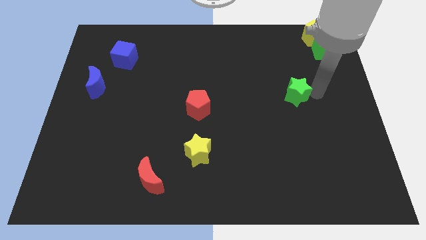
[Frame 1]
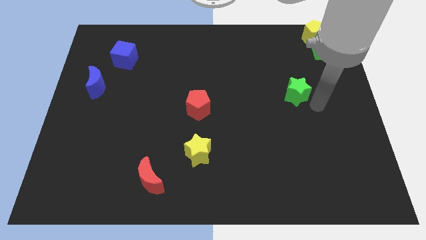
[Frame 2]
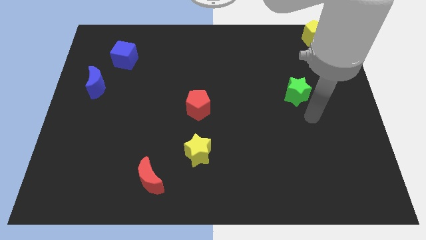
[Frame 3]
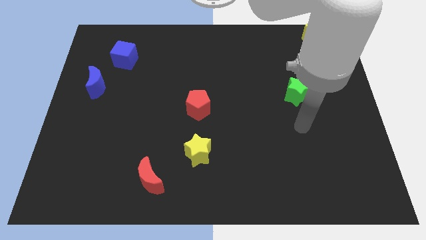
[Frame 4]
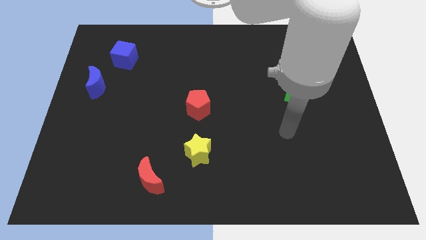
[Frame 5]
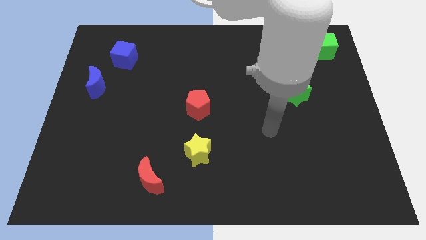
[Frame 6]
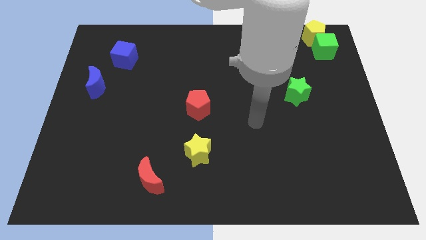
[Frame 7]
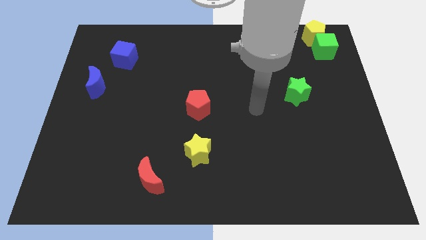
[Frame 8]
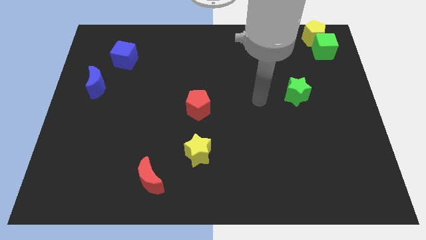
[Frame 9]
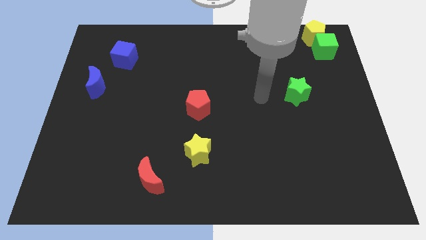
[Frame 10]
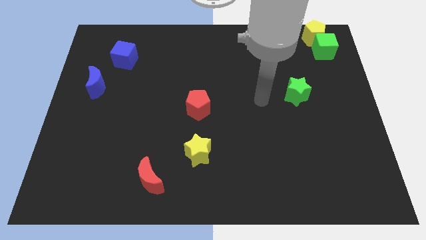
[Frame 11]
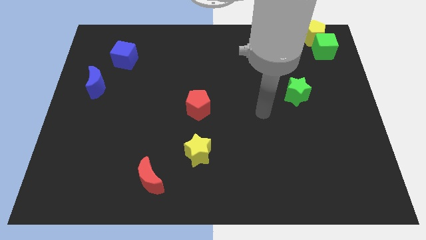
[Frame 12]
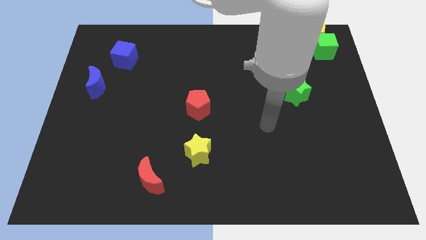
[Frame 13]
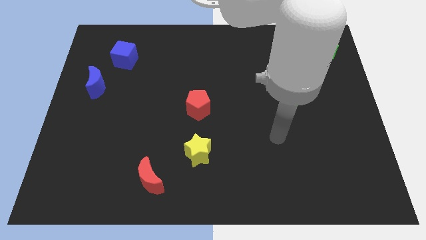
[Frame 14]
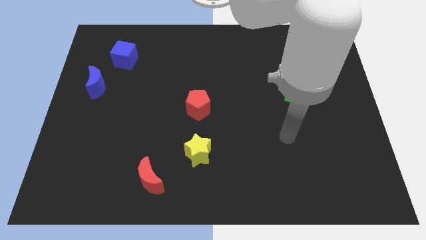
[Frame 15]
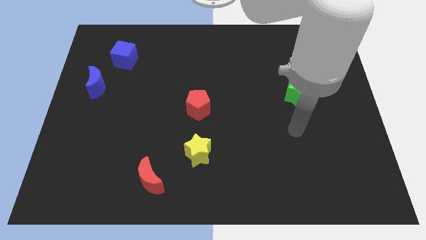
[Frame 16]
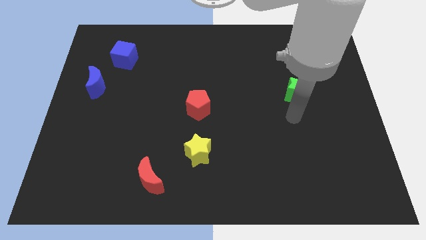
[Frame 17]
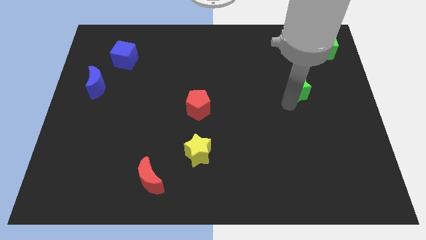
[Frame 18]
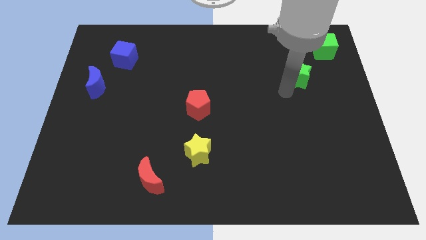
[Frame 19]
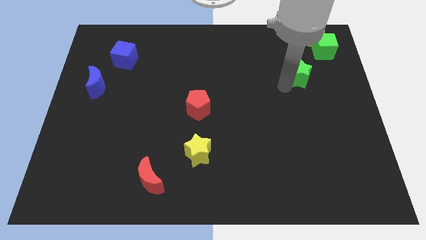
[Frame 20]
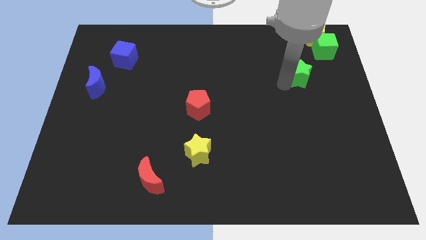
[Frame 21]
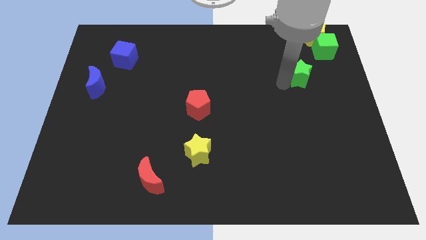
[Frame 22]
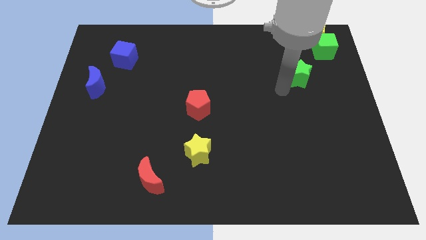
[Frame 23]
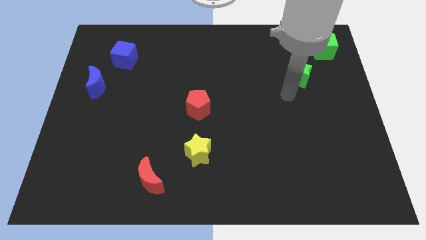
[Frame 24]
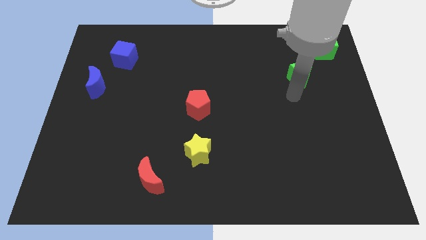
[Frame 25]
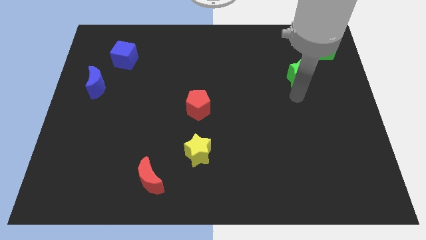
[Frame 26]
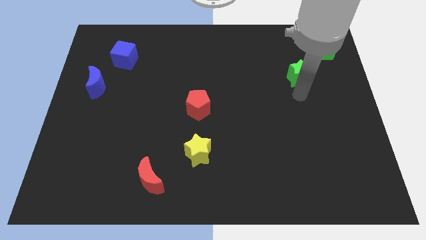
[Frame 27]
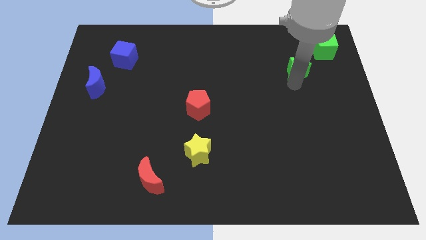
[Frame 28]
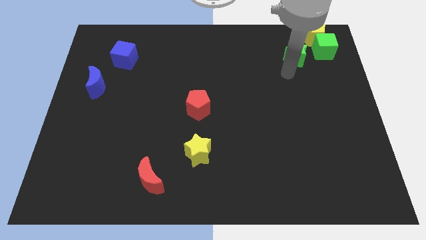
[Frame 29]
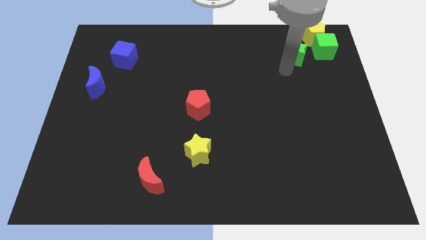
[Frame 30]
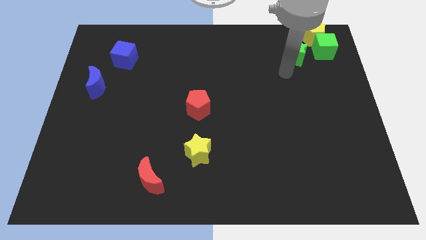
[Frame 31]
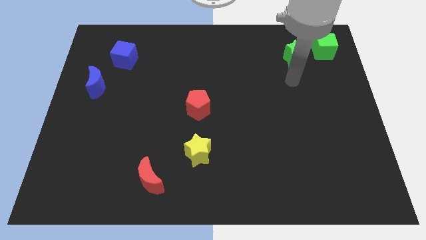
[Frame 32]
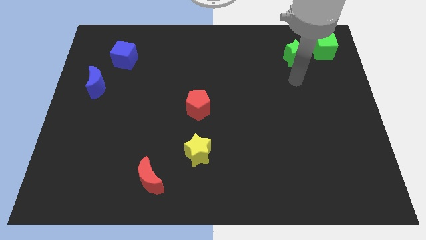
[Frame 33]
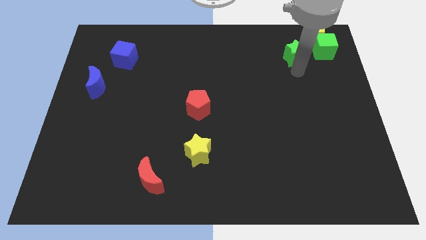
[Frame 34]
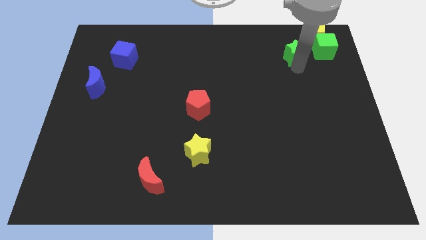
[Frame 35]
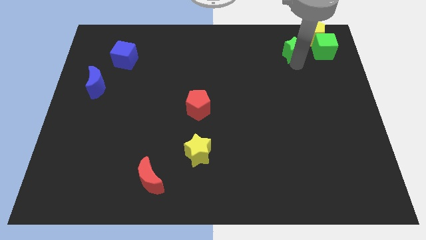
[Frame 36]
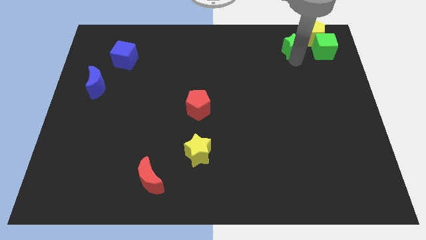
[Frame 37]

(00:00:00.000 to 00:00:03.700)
move the green star to the left side of the green cube

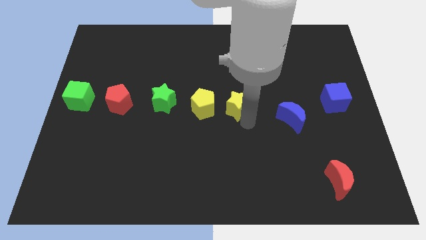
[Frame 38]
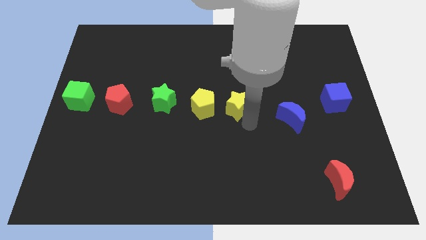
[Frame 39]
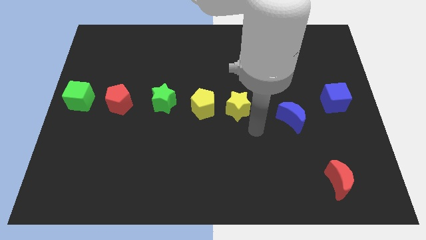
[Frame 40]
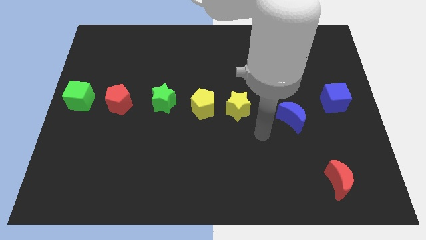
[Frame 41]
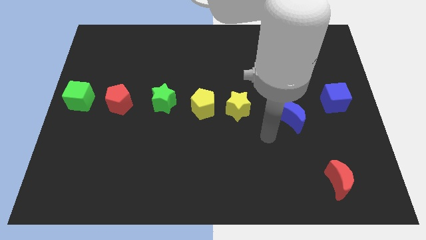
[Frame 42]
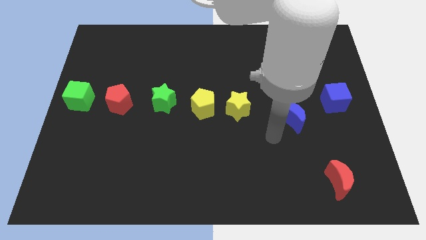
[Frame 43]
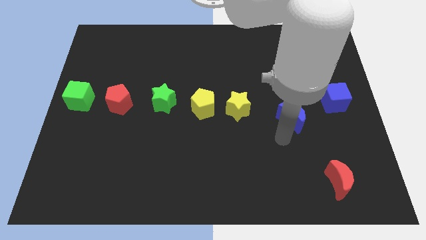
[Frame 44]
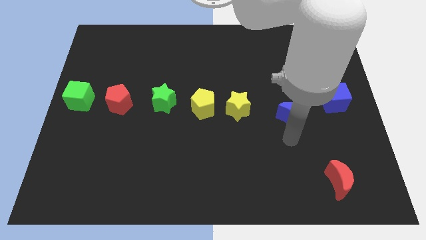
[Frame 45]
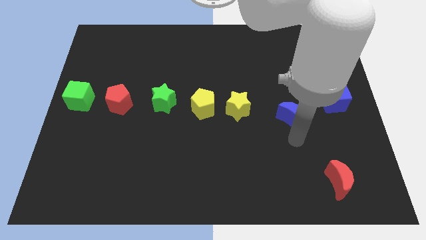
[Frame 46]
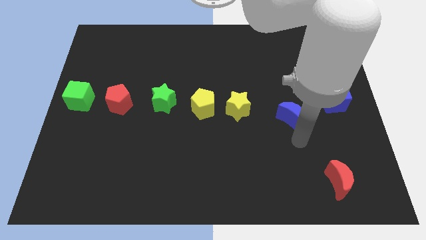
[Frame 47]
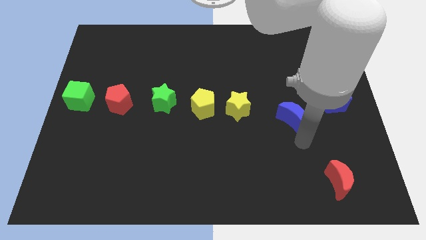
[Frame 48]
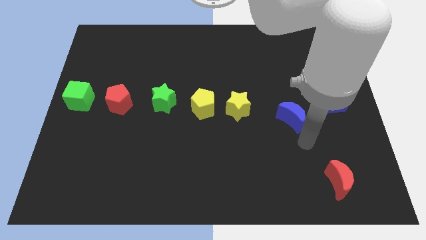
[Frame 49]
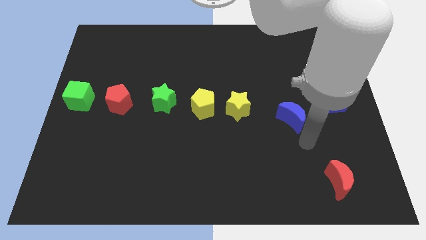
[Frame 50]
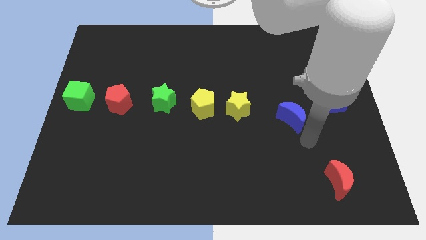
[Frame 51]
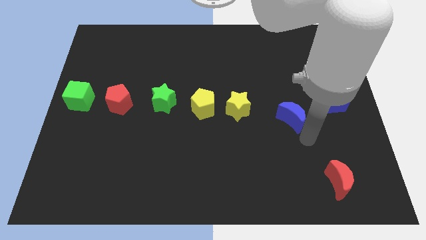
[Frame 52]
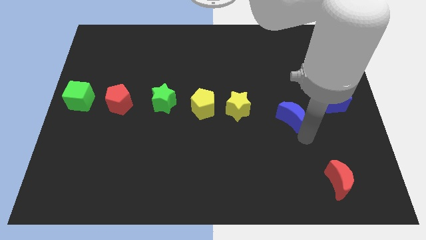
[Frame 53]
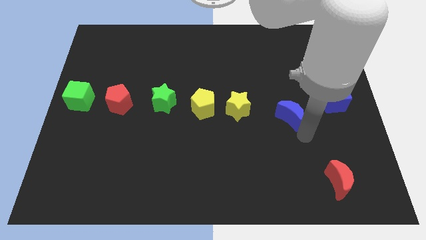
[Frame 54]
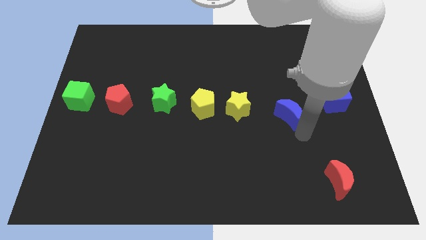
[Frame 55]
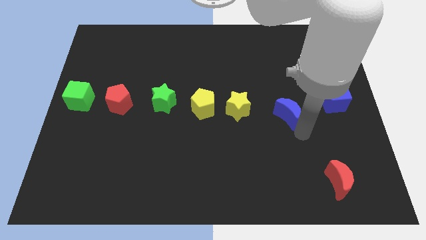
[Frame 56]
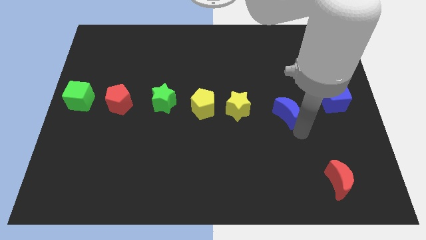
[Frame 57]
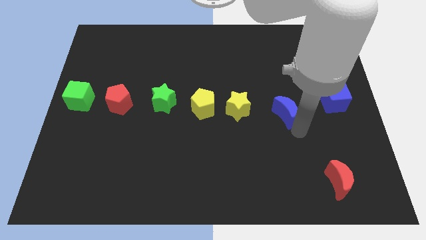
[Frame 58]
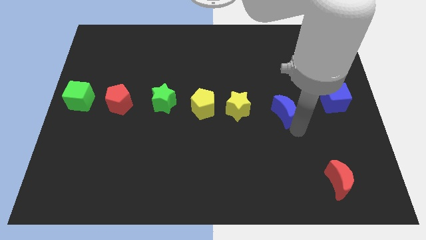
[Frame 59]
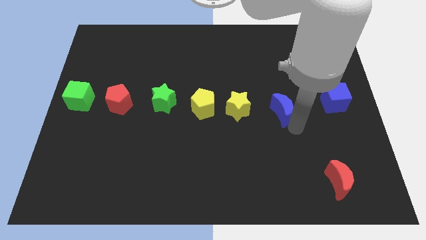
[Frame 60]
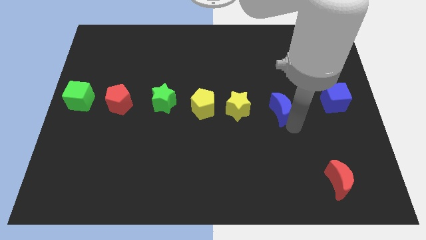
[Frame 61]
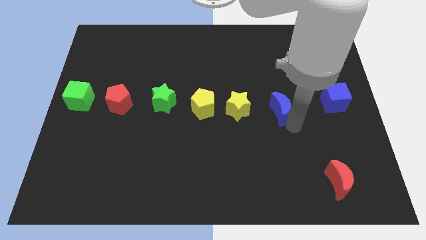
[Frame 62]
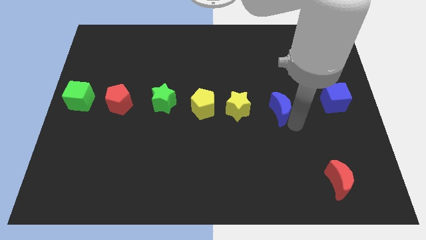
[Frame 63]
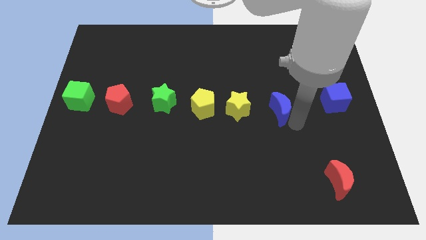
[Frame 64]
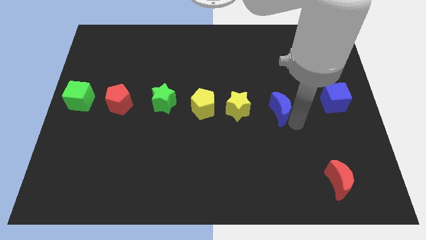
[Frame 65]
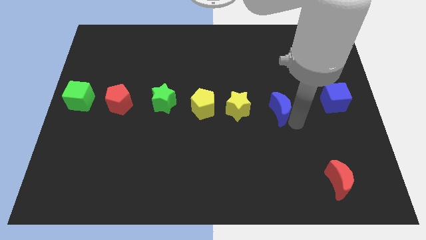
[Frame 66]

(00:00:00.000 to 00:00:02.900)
place blue moon in horizontal line of blocks

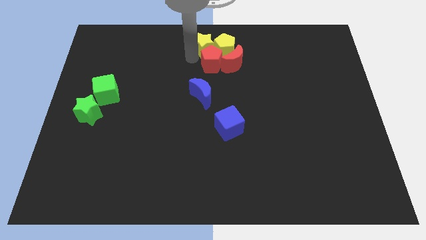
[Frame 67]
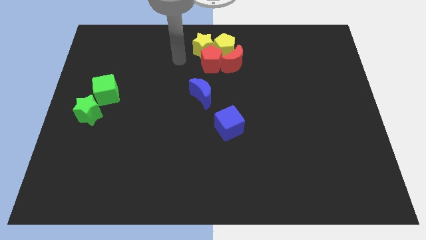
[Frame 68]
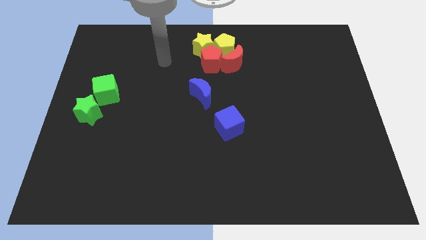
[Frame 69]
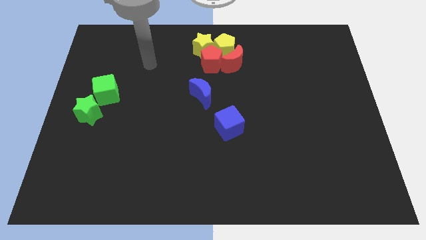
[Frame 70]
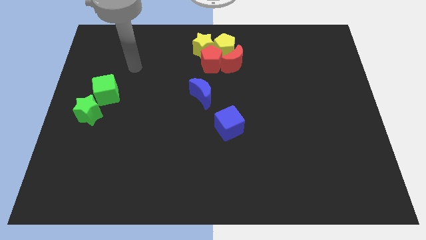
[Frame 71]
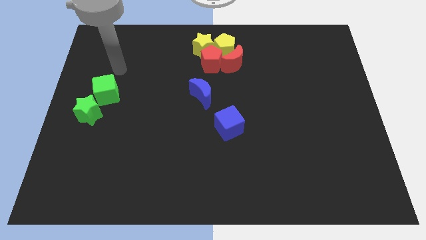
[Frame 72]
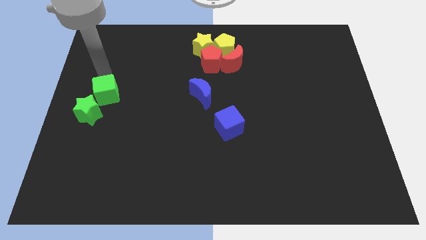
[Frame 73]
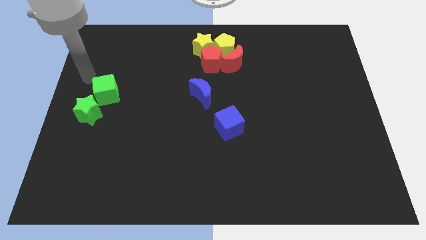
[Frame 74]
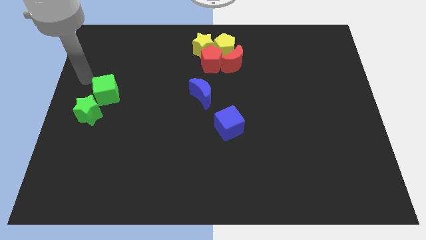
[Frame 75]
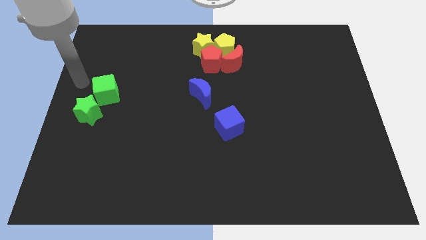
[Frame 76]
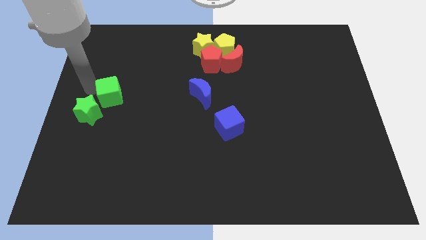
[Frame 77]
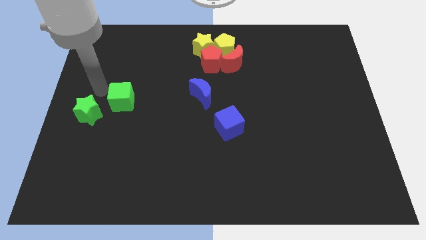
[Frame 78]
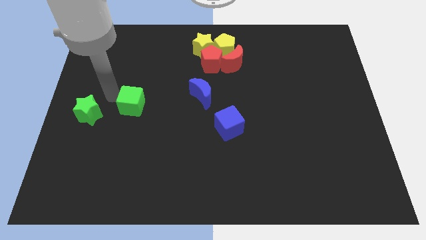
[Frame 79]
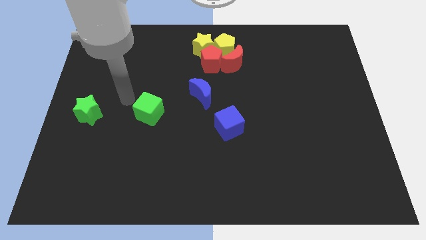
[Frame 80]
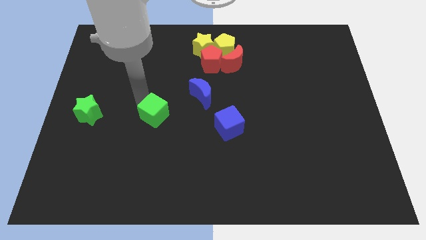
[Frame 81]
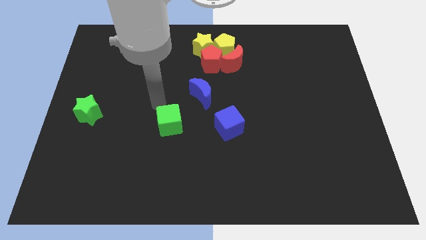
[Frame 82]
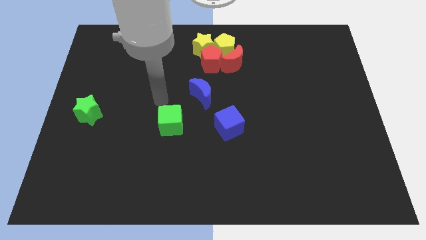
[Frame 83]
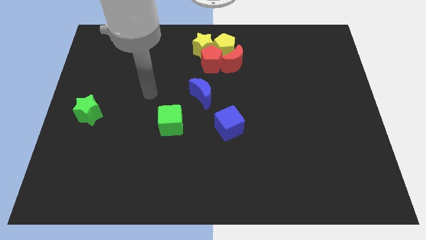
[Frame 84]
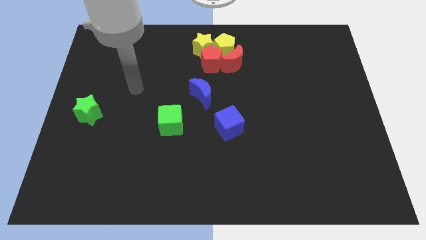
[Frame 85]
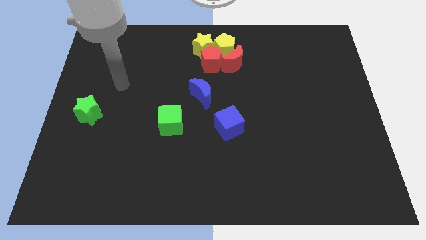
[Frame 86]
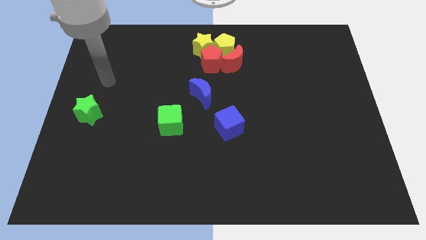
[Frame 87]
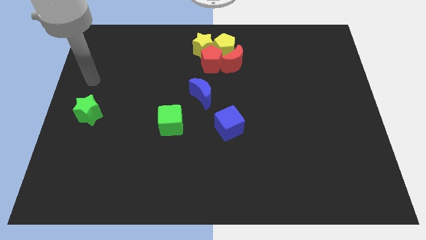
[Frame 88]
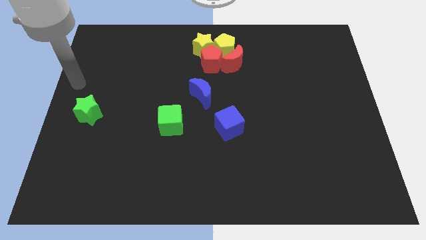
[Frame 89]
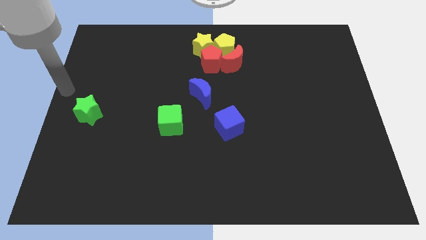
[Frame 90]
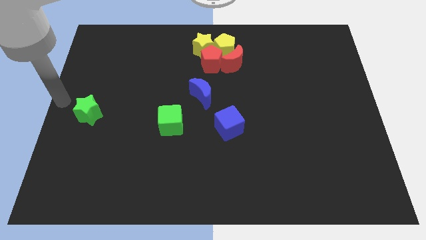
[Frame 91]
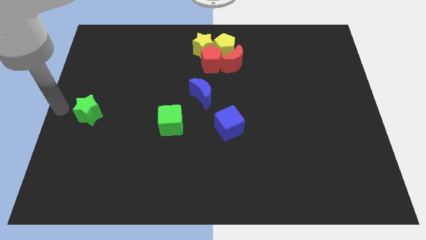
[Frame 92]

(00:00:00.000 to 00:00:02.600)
move green cube parallel left to the blue cube
